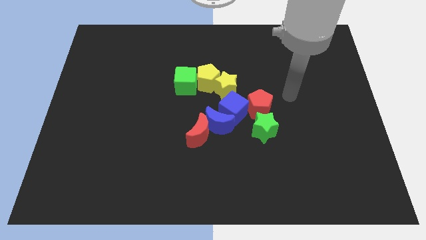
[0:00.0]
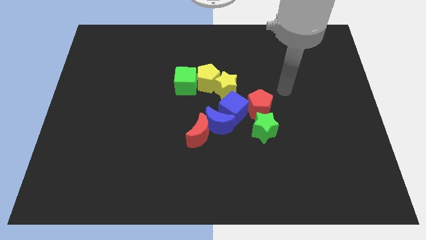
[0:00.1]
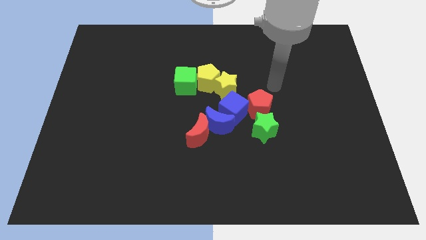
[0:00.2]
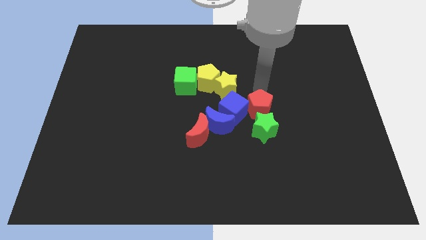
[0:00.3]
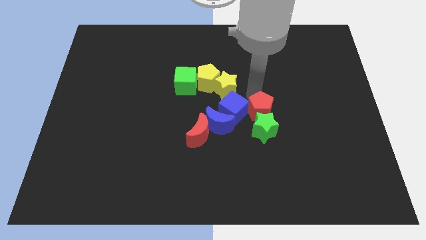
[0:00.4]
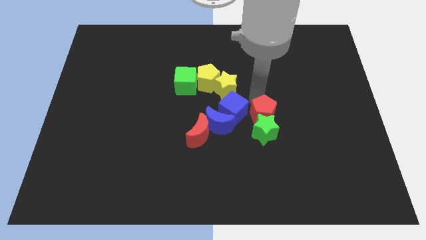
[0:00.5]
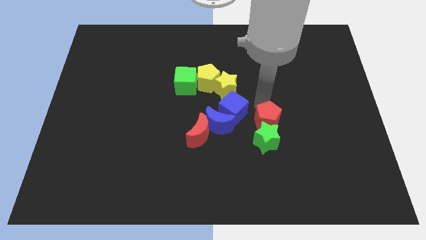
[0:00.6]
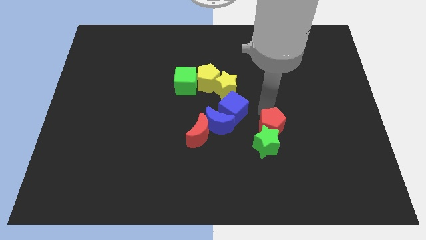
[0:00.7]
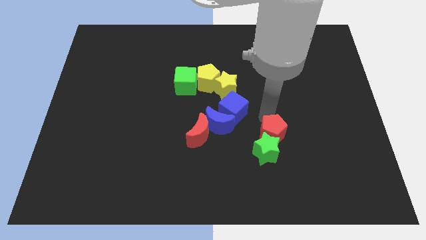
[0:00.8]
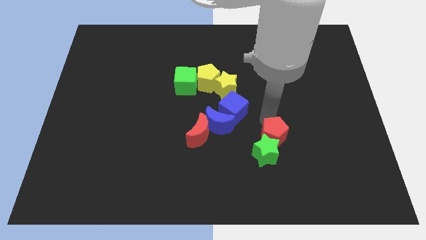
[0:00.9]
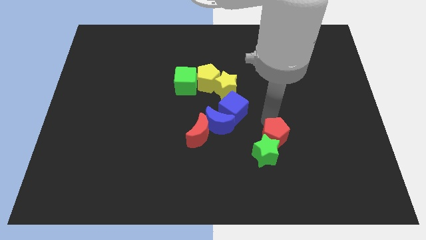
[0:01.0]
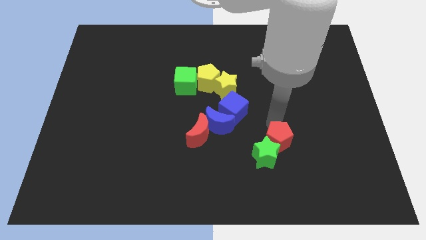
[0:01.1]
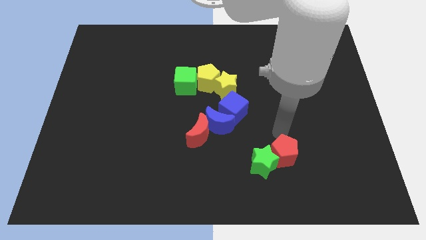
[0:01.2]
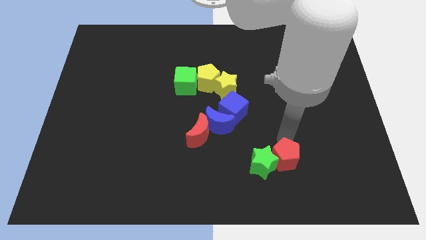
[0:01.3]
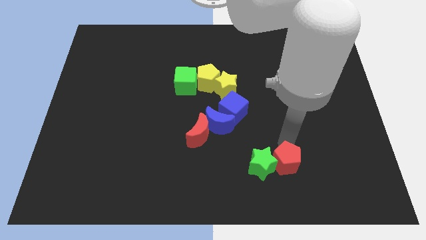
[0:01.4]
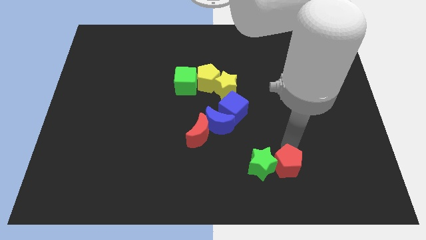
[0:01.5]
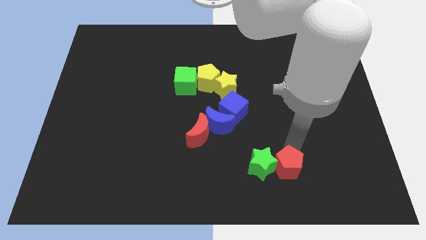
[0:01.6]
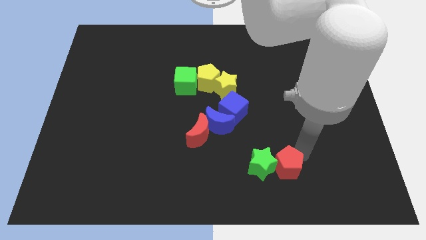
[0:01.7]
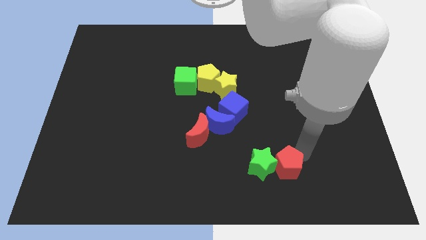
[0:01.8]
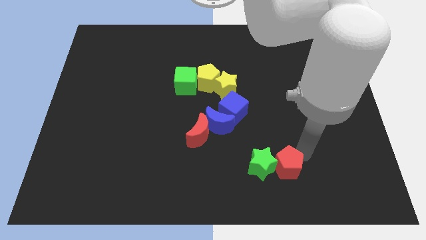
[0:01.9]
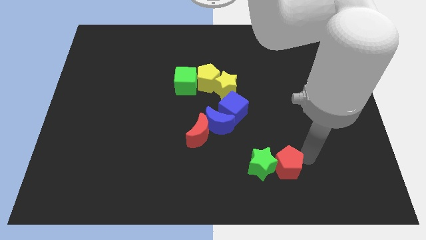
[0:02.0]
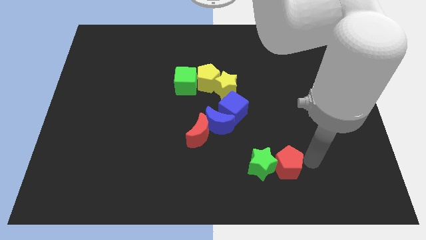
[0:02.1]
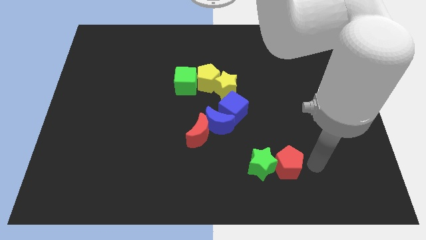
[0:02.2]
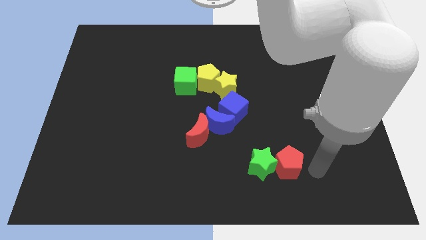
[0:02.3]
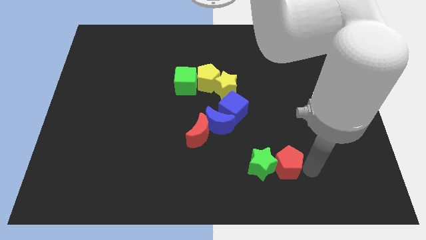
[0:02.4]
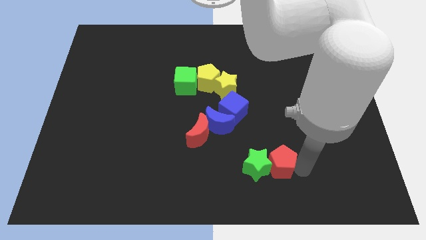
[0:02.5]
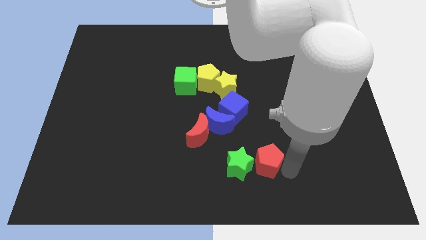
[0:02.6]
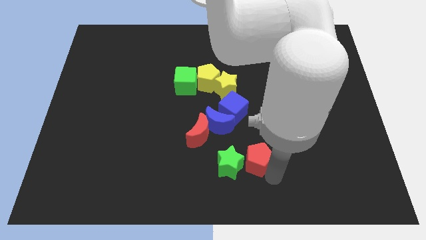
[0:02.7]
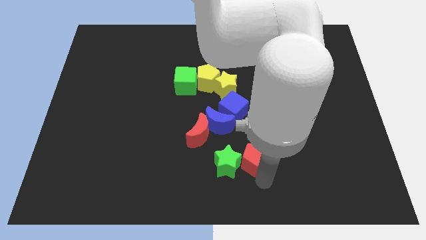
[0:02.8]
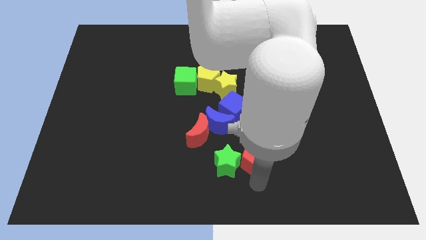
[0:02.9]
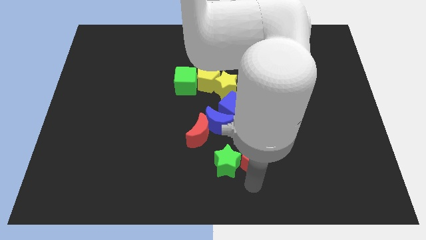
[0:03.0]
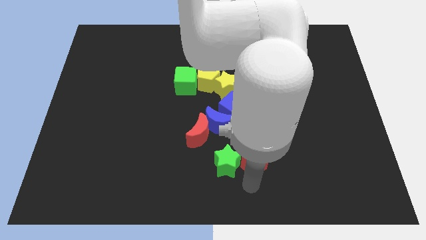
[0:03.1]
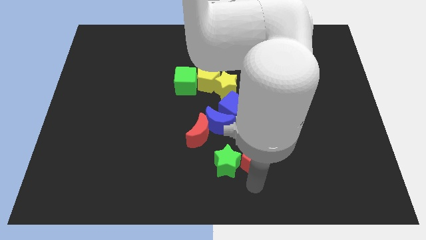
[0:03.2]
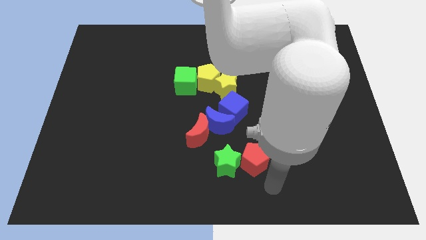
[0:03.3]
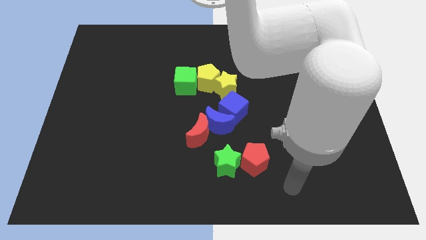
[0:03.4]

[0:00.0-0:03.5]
push green star with red pentagon

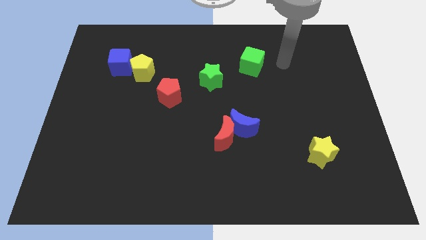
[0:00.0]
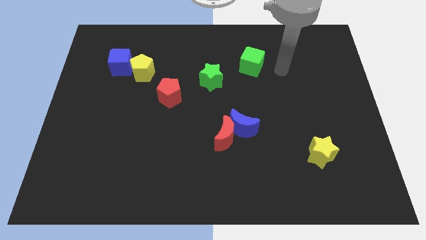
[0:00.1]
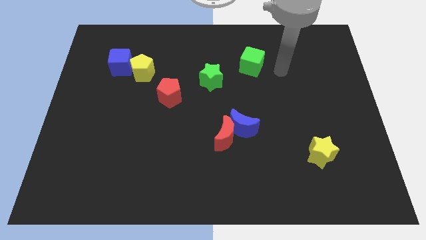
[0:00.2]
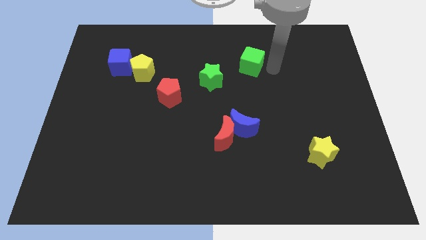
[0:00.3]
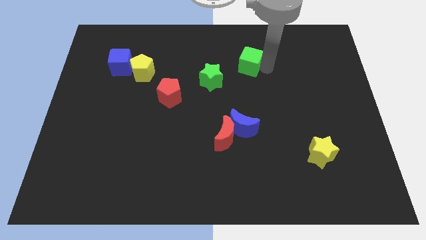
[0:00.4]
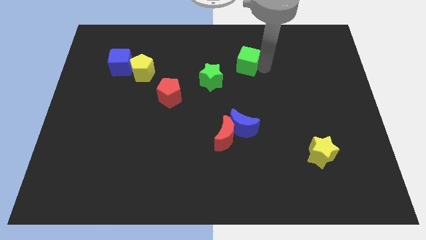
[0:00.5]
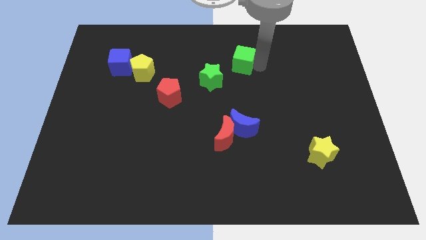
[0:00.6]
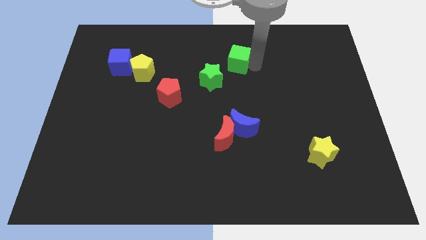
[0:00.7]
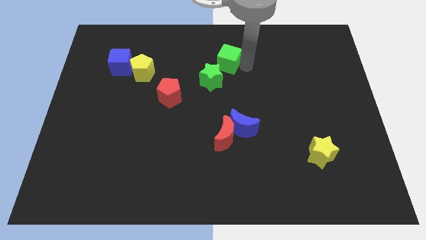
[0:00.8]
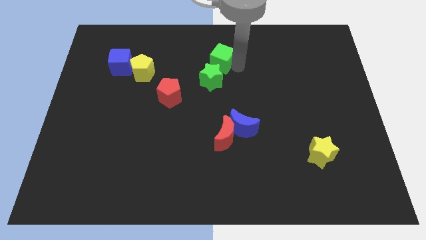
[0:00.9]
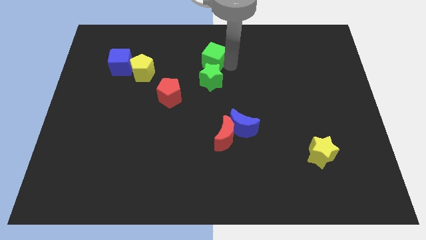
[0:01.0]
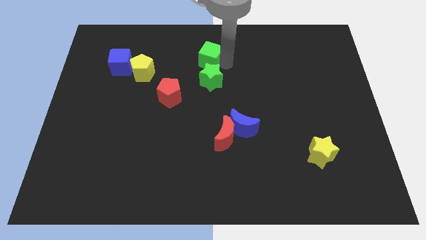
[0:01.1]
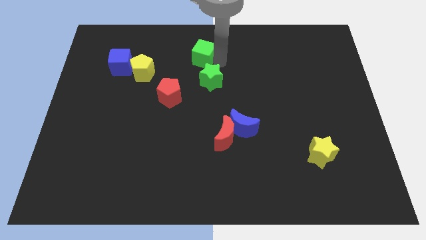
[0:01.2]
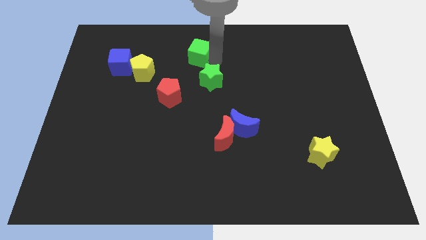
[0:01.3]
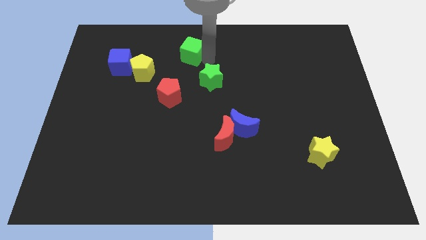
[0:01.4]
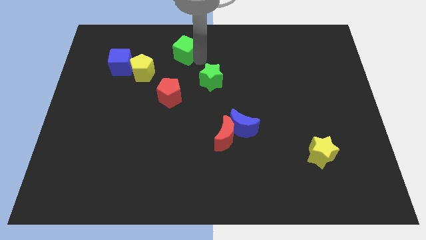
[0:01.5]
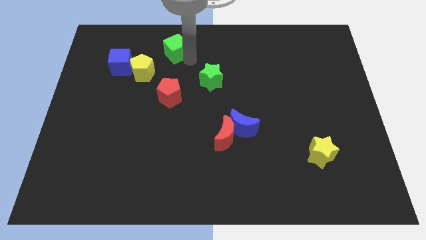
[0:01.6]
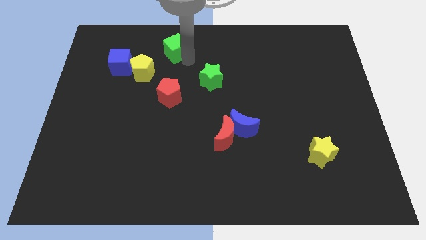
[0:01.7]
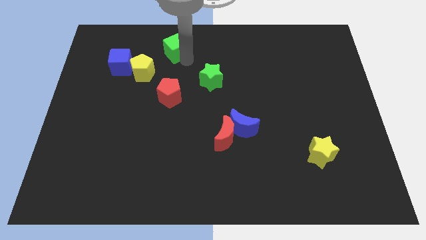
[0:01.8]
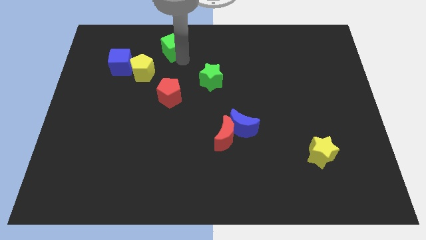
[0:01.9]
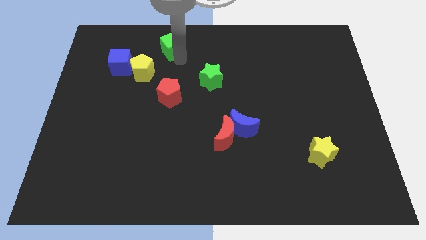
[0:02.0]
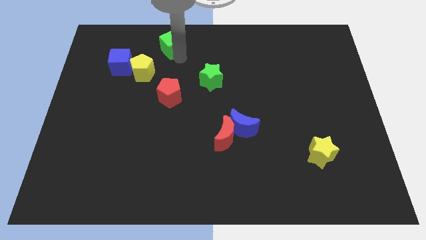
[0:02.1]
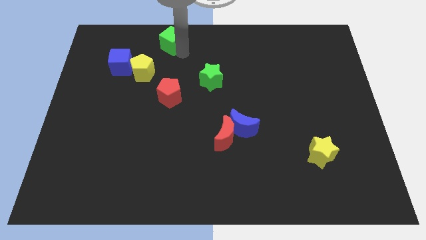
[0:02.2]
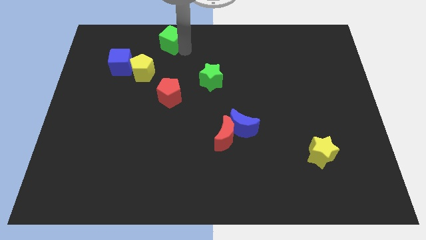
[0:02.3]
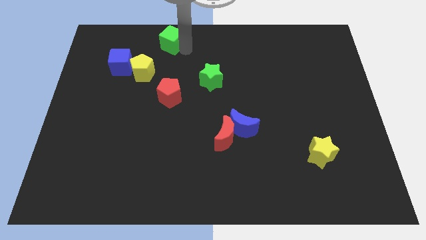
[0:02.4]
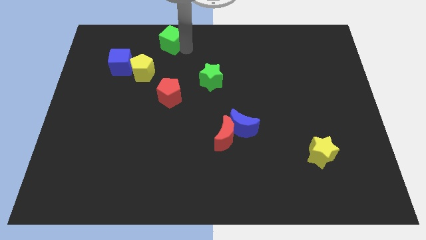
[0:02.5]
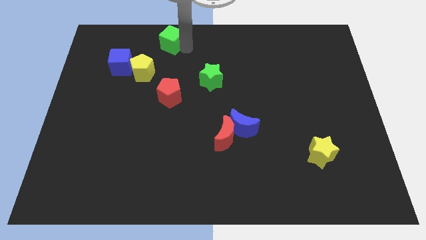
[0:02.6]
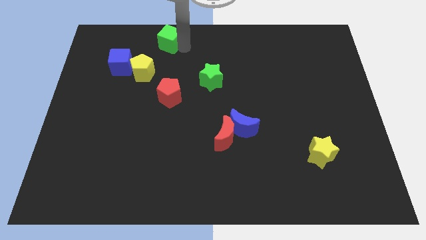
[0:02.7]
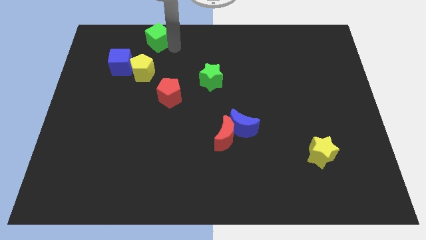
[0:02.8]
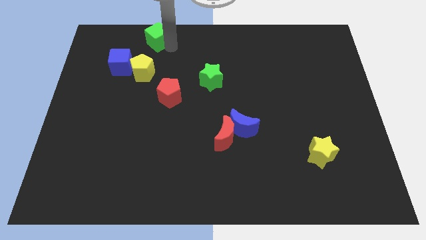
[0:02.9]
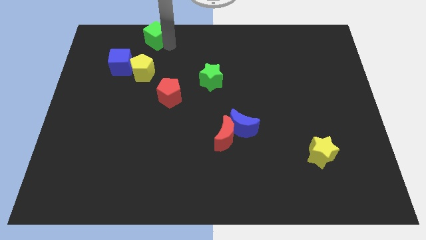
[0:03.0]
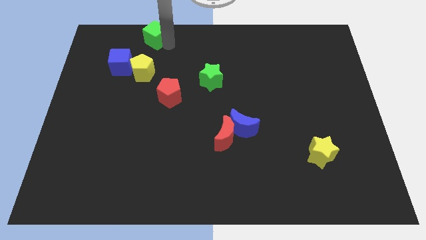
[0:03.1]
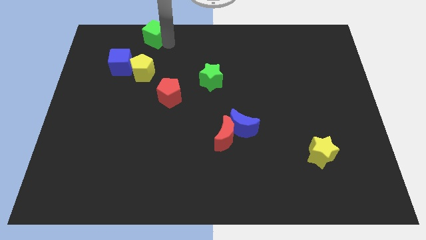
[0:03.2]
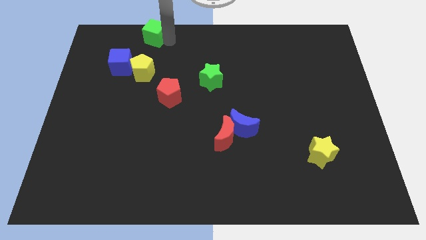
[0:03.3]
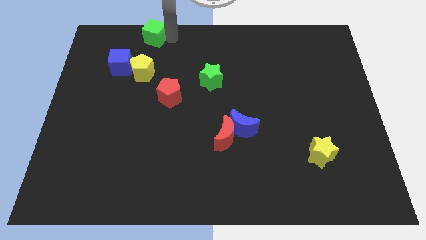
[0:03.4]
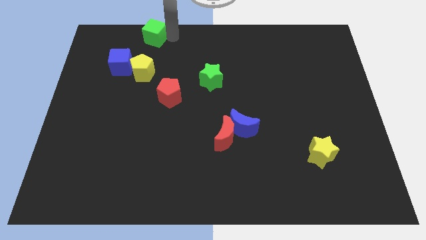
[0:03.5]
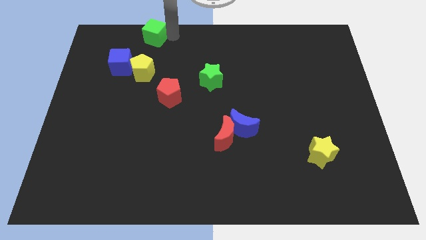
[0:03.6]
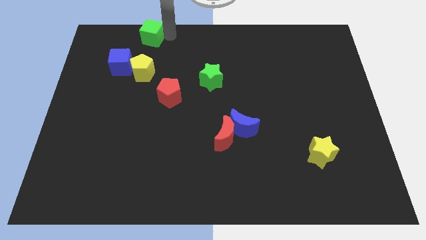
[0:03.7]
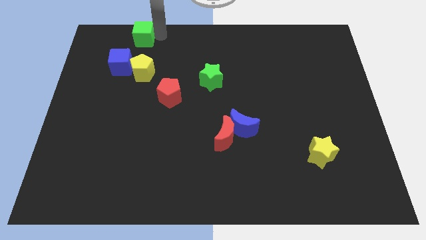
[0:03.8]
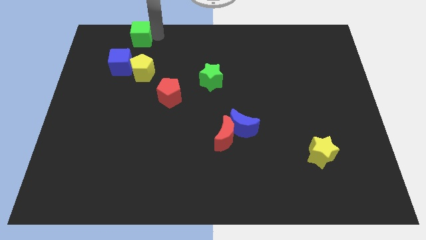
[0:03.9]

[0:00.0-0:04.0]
place green cube above yellow star

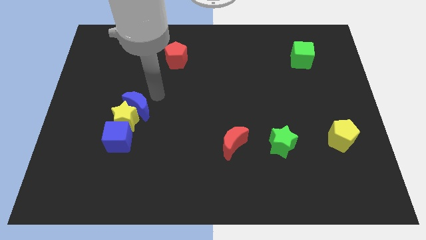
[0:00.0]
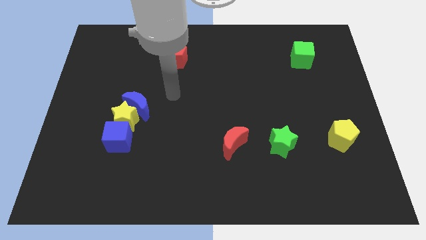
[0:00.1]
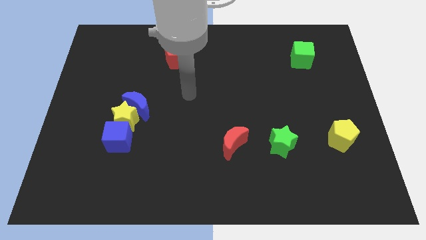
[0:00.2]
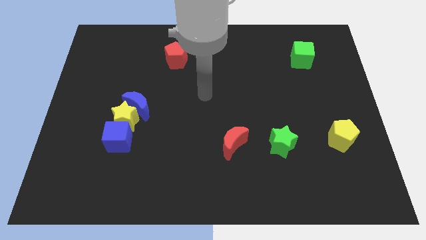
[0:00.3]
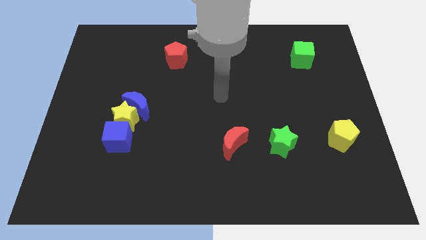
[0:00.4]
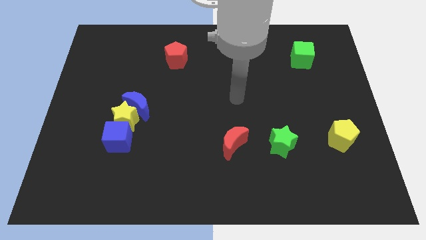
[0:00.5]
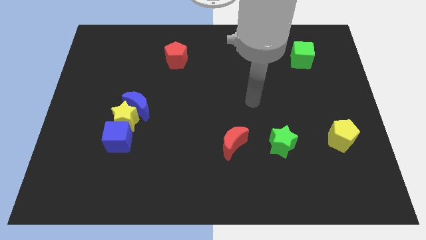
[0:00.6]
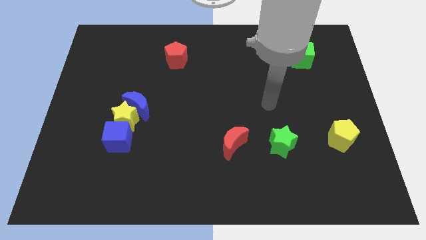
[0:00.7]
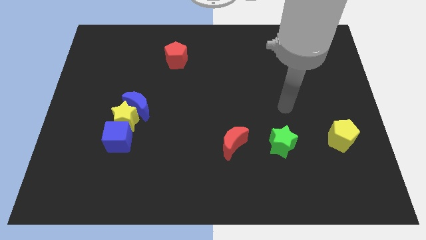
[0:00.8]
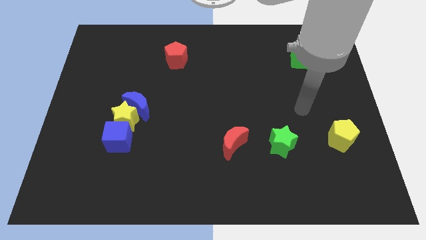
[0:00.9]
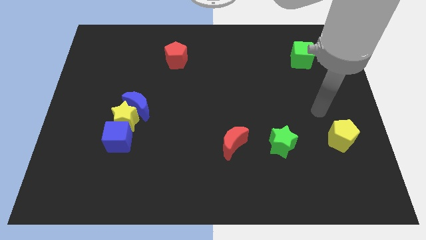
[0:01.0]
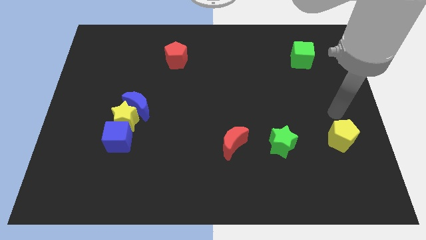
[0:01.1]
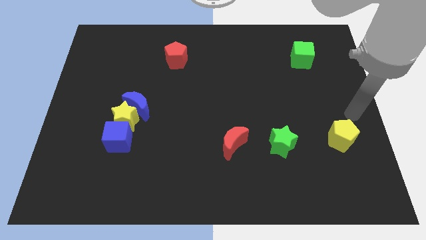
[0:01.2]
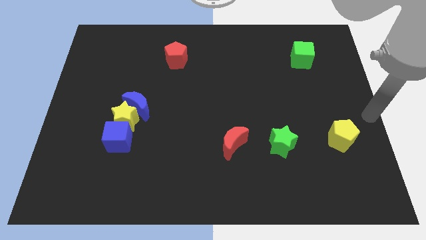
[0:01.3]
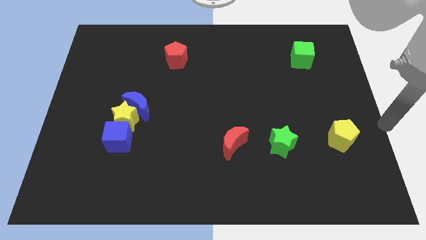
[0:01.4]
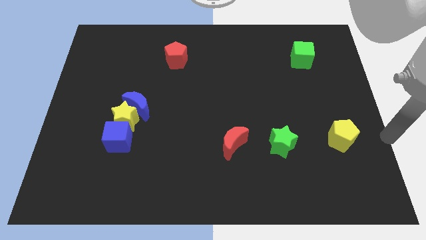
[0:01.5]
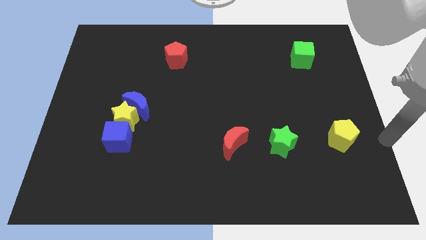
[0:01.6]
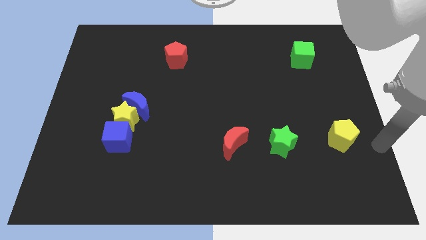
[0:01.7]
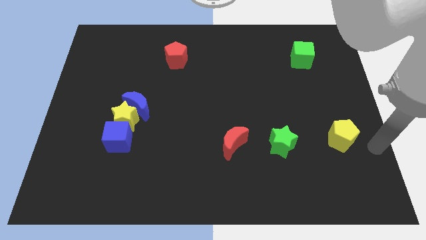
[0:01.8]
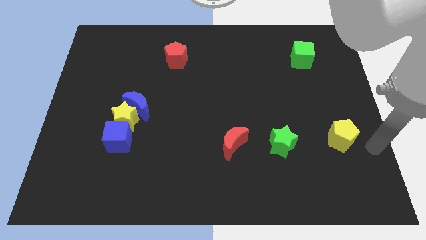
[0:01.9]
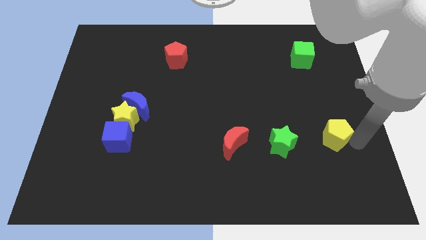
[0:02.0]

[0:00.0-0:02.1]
point your arm at the right side of the yellow pentagon
